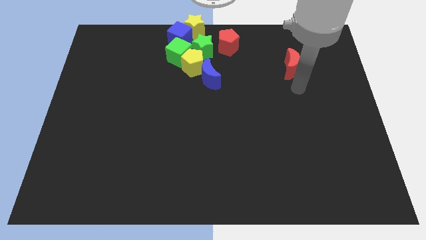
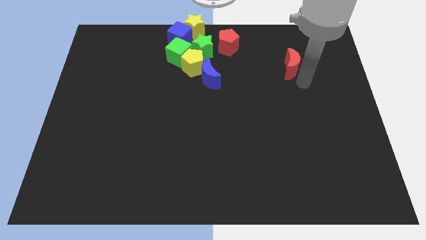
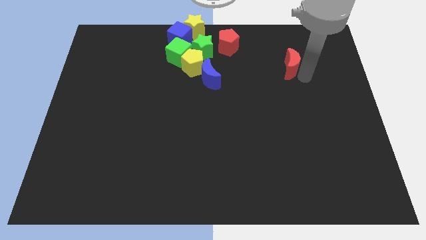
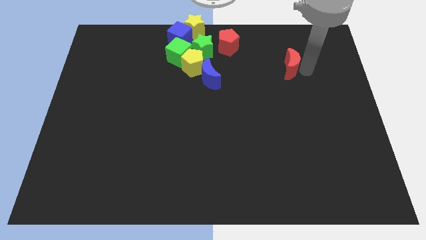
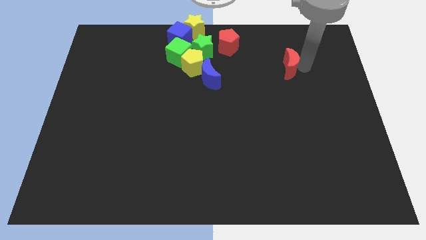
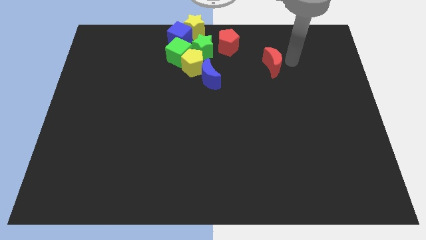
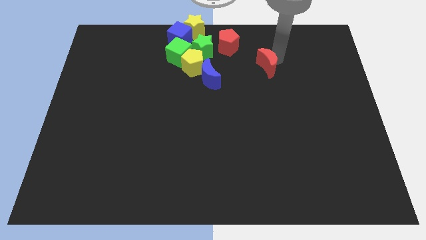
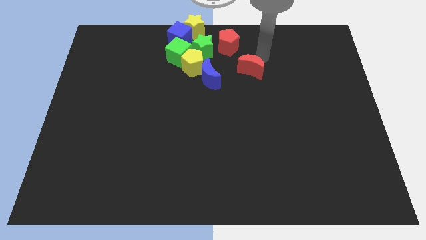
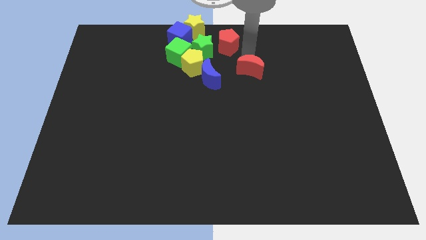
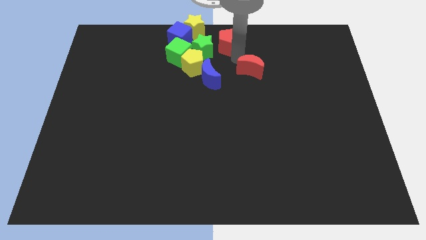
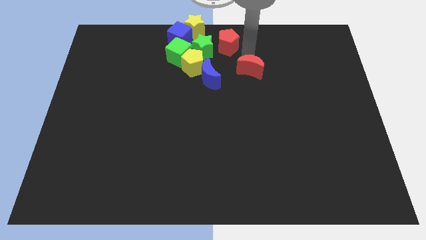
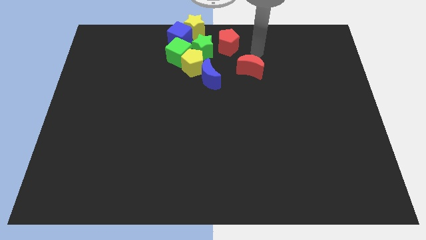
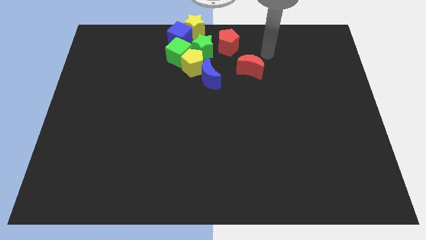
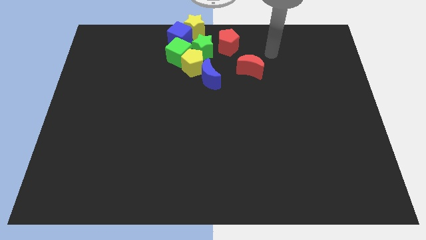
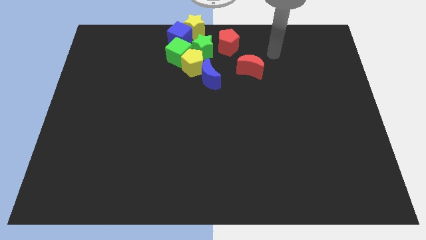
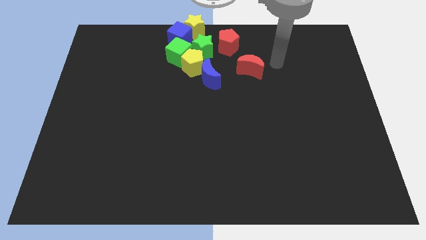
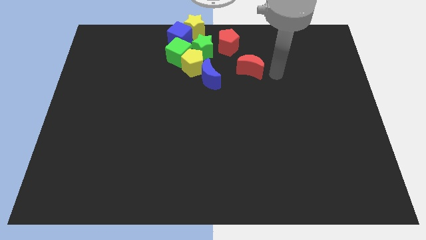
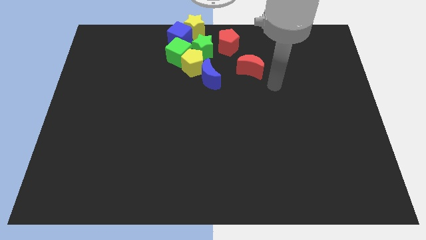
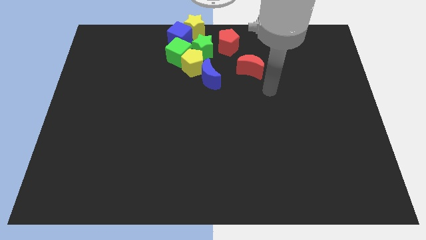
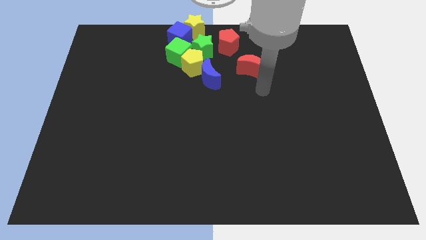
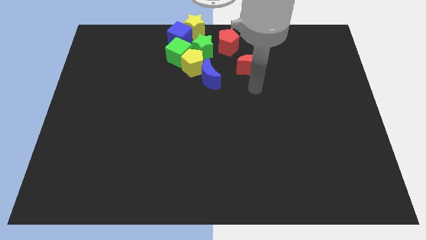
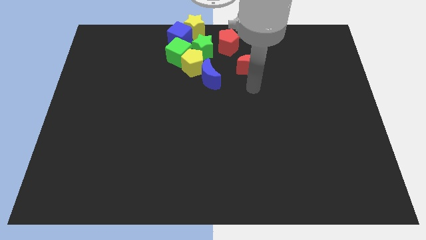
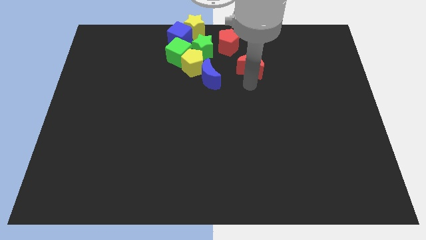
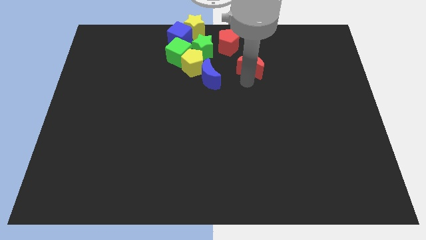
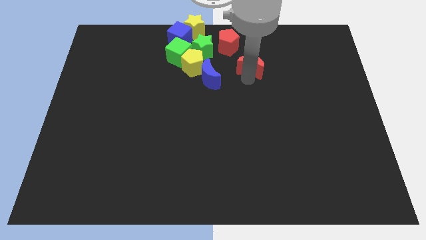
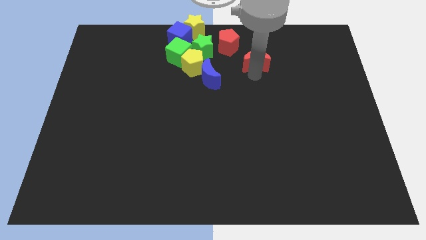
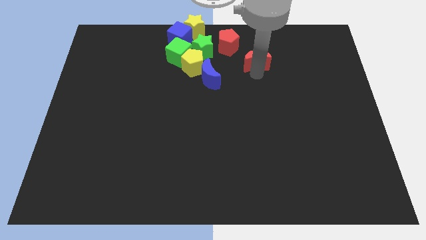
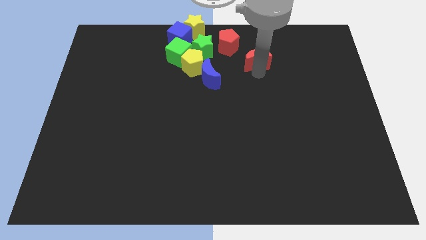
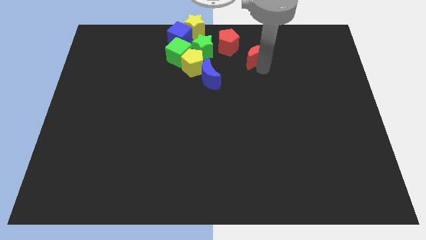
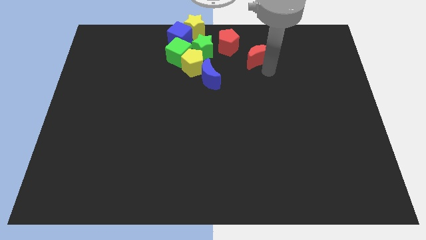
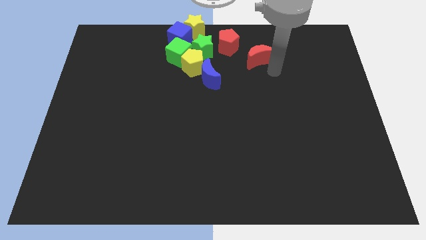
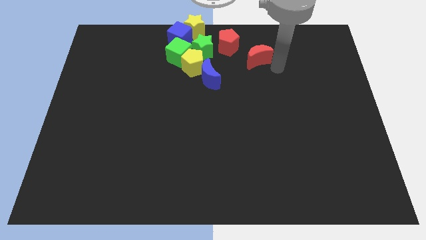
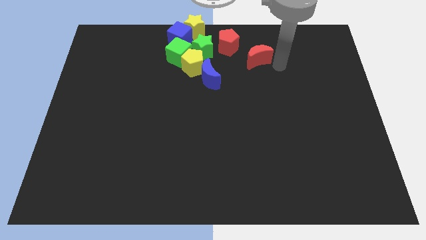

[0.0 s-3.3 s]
place red moon to the bottom right of red pentagon

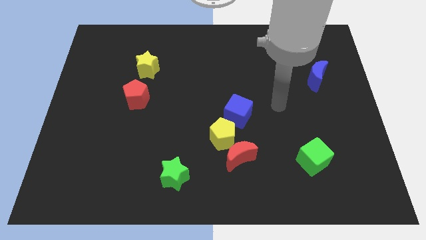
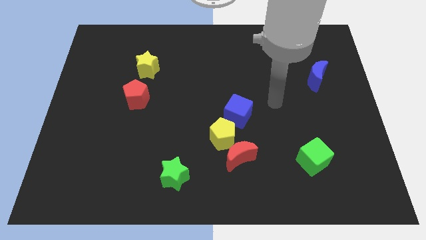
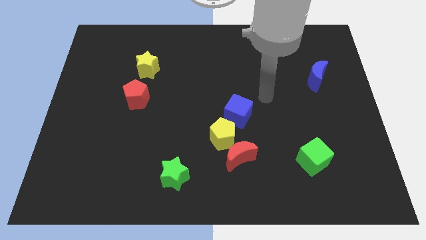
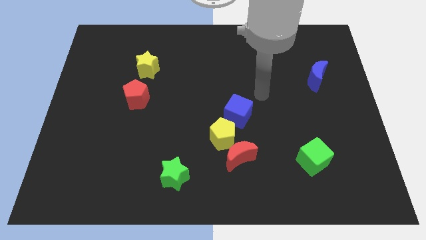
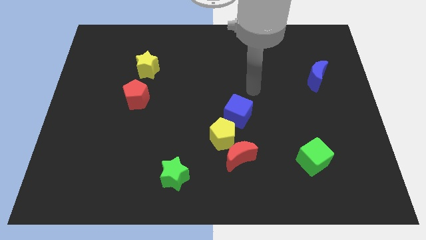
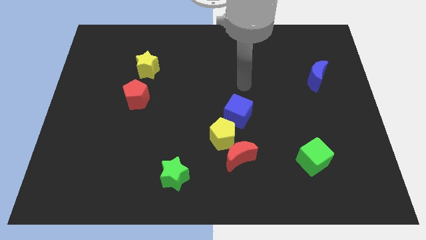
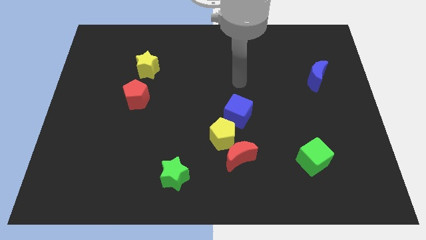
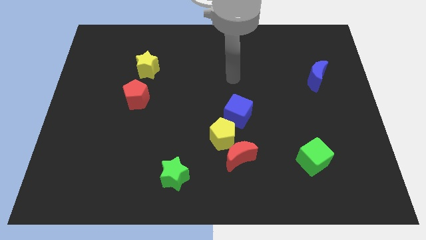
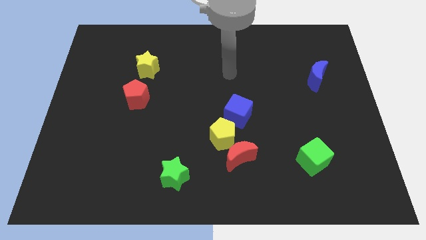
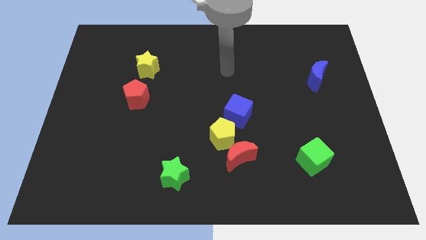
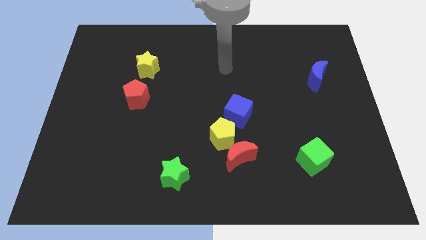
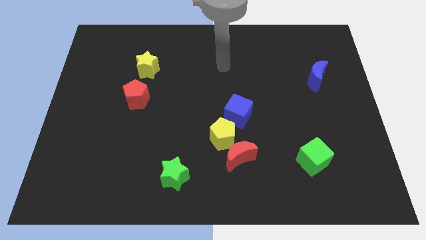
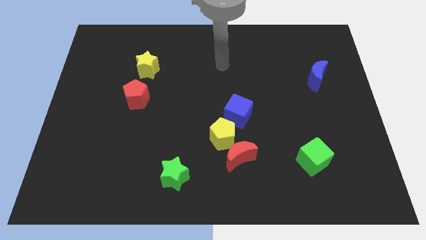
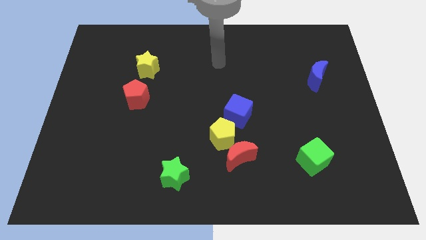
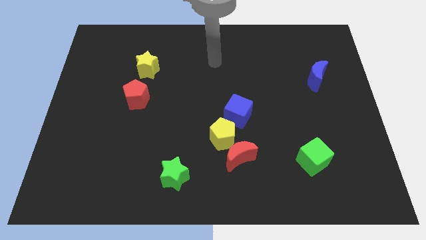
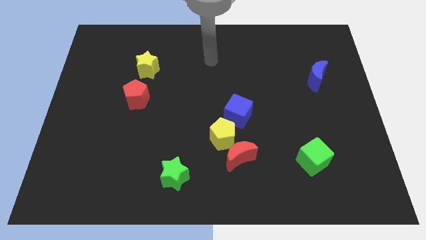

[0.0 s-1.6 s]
move your arm towards the top side of the board

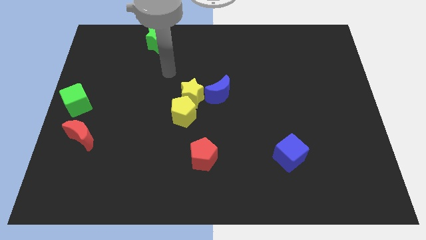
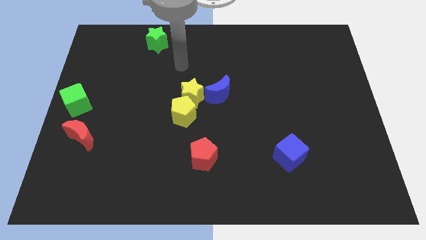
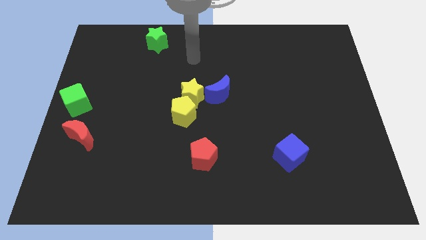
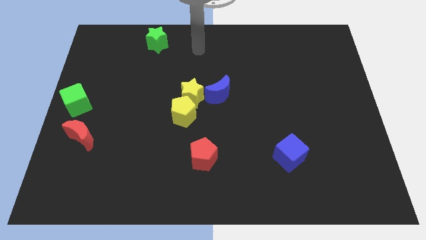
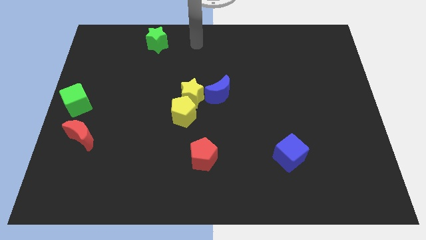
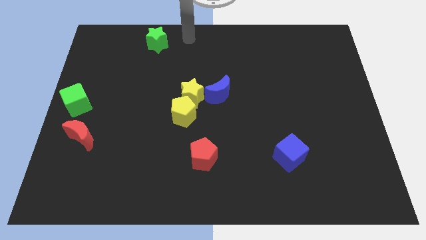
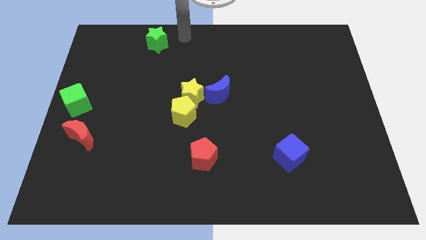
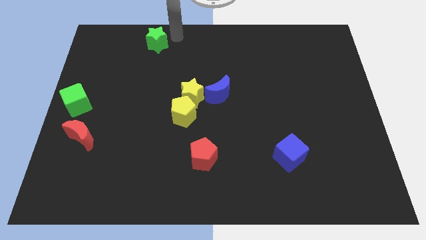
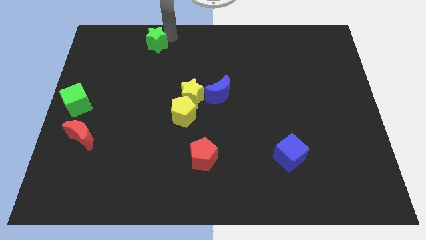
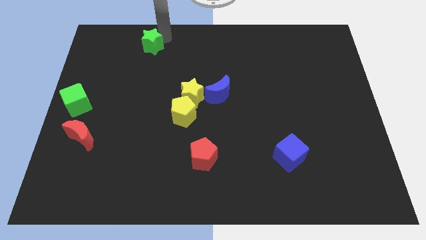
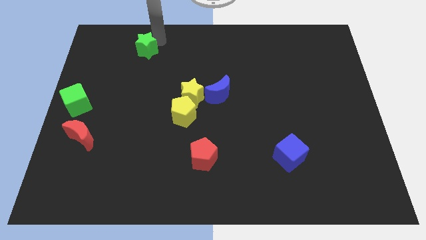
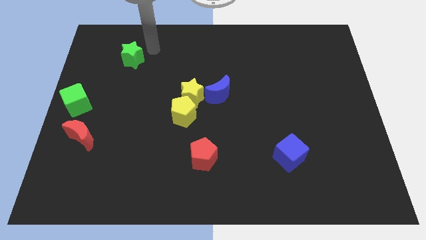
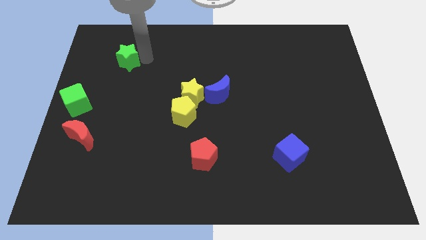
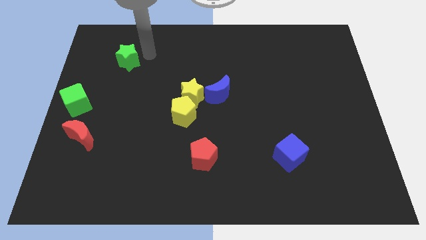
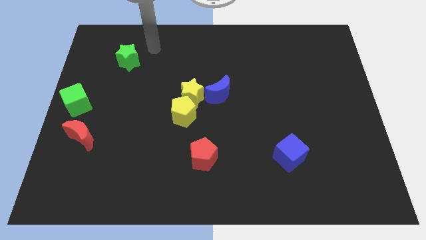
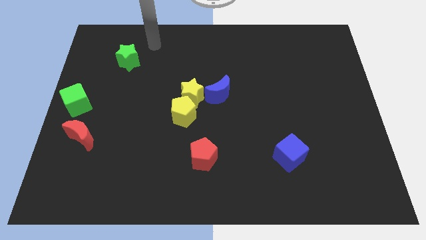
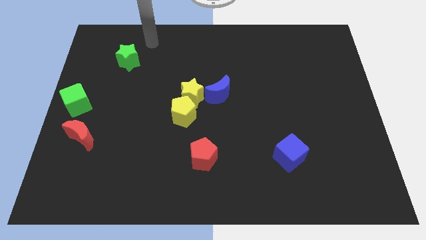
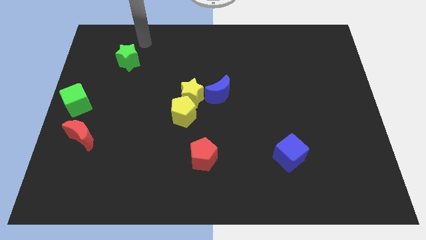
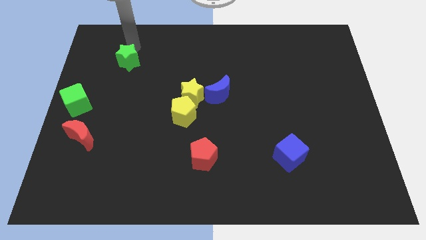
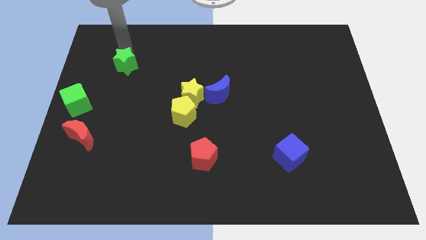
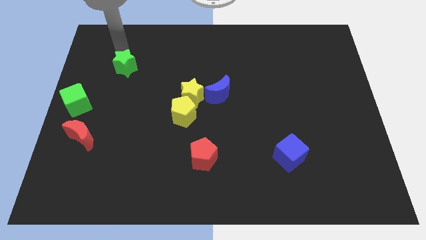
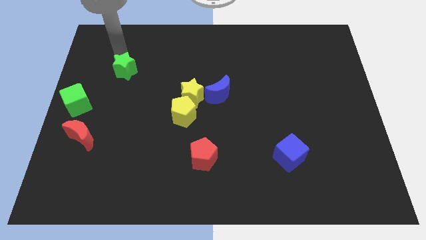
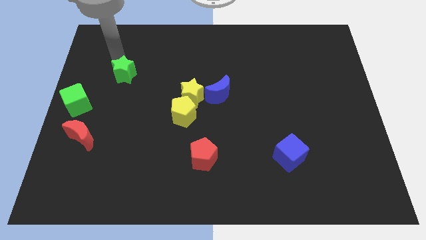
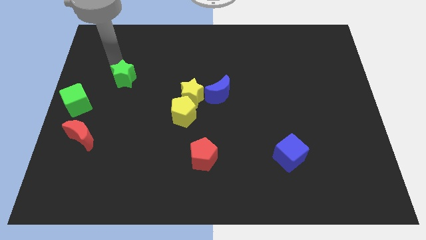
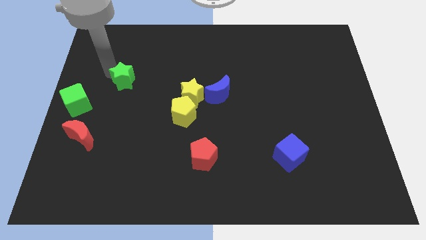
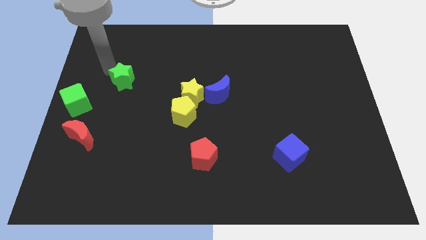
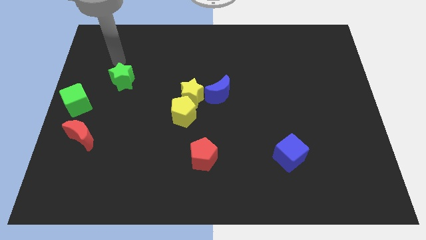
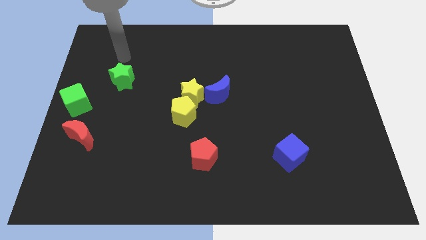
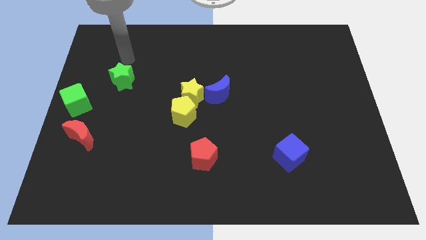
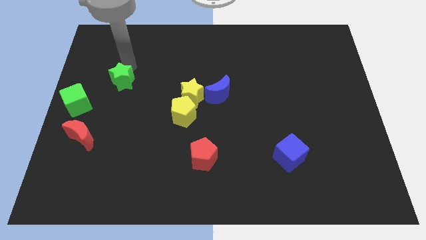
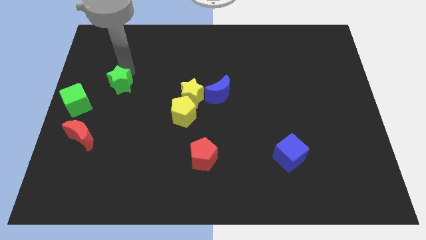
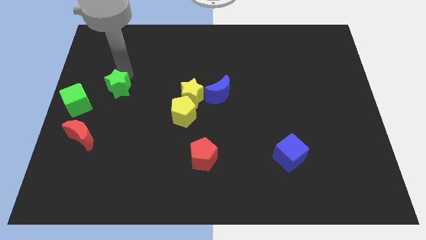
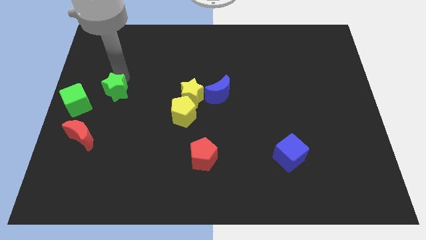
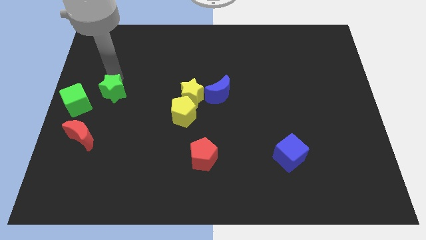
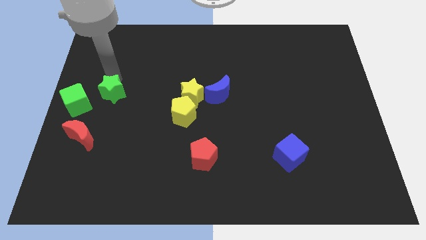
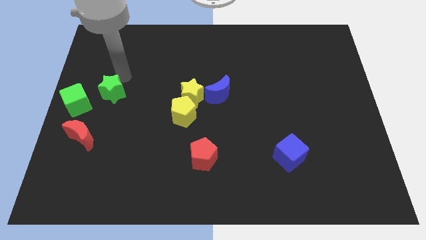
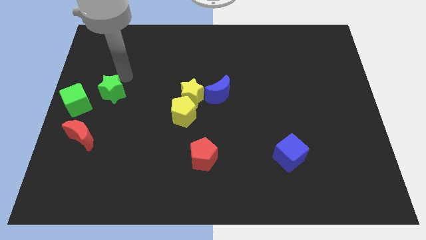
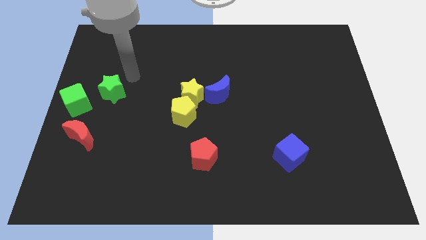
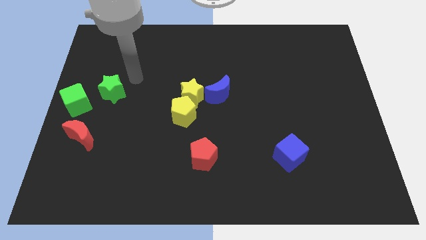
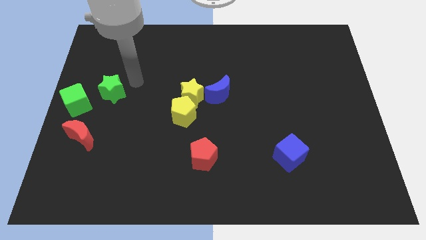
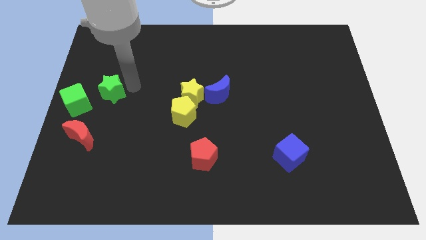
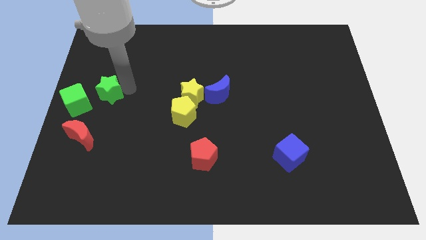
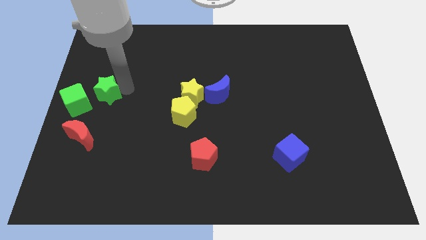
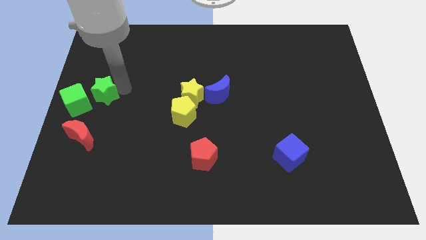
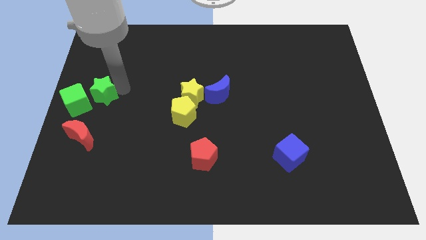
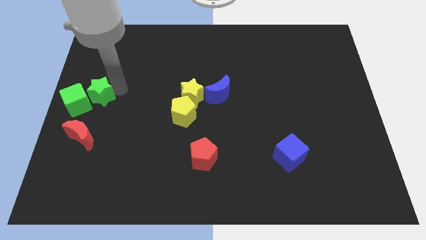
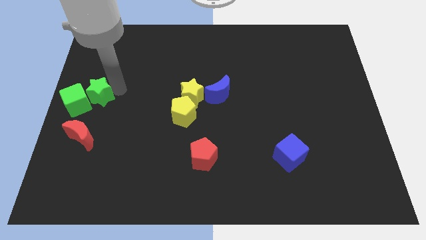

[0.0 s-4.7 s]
place the green star diagonally right to the green cube
